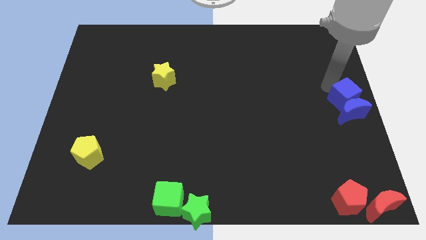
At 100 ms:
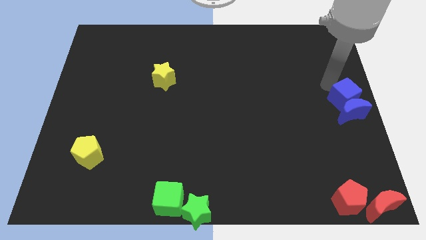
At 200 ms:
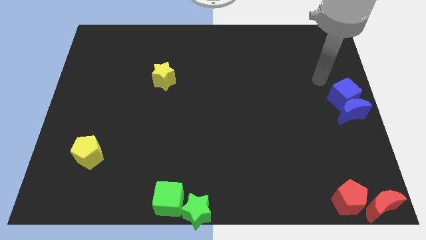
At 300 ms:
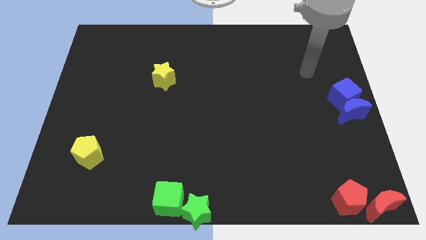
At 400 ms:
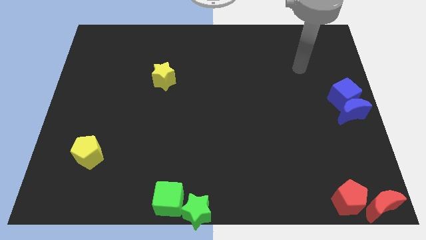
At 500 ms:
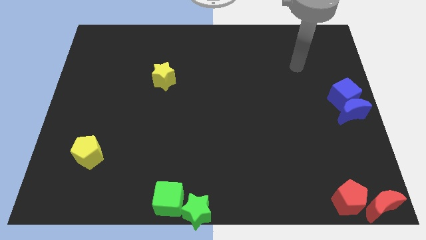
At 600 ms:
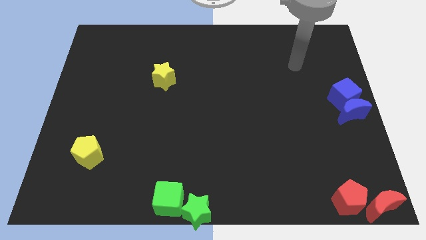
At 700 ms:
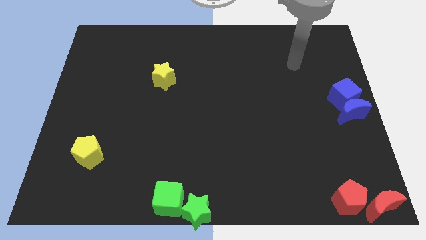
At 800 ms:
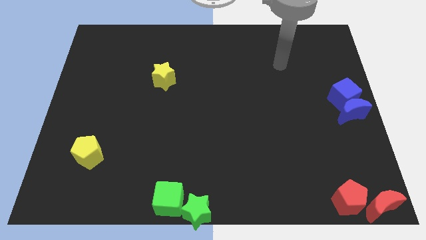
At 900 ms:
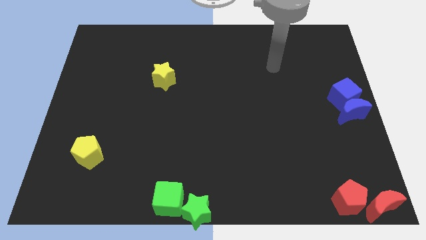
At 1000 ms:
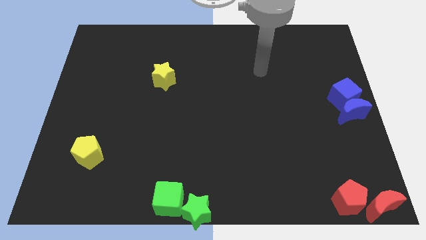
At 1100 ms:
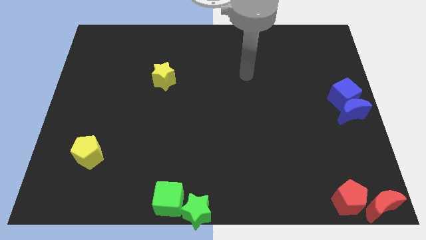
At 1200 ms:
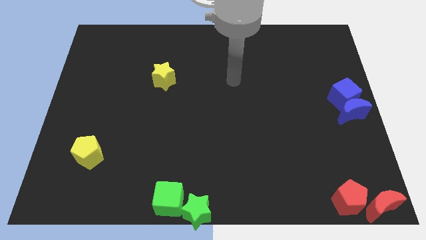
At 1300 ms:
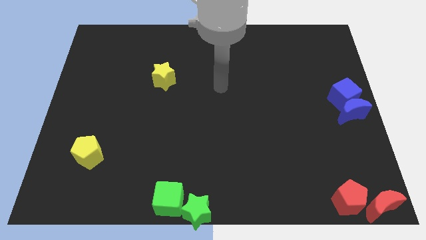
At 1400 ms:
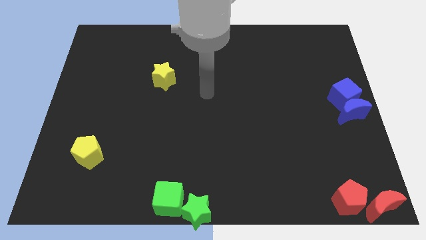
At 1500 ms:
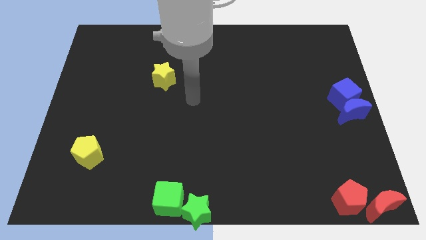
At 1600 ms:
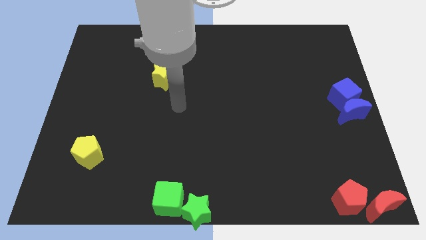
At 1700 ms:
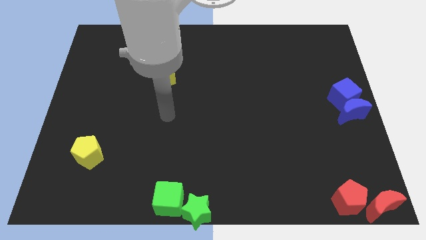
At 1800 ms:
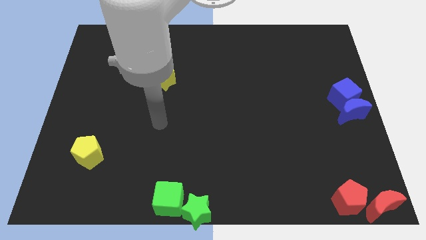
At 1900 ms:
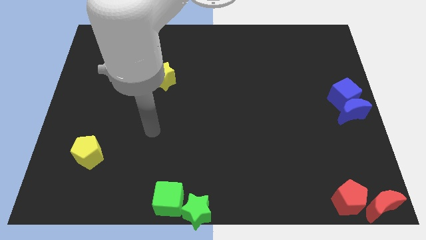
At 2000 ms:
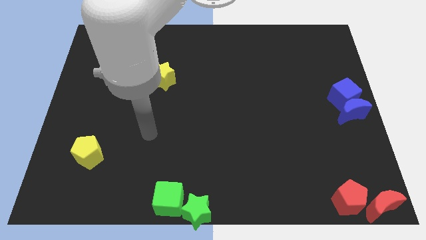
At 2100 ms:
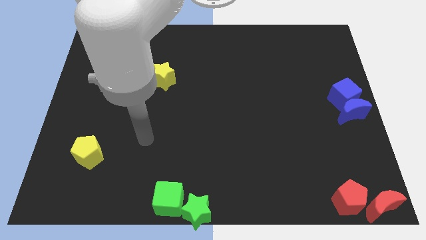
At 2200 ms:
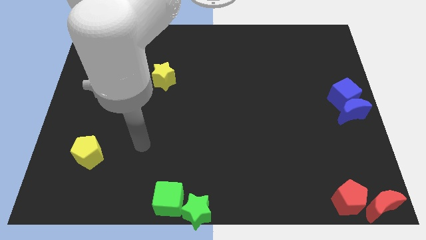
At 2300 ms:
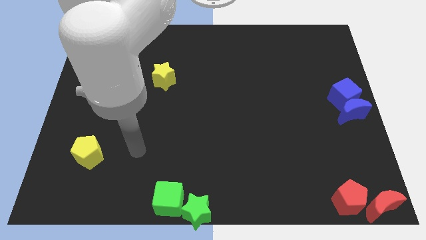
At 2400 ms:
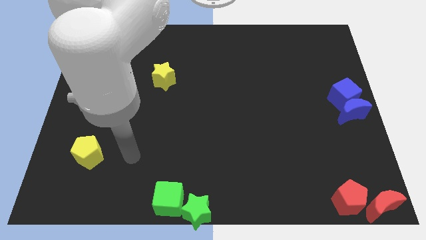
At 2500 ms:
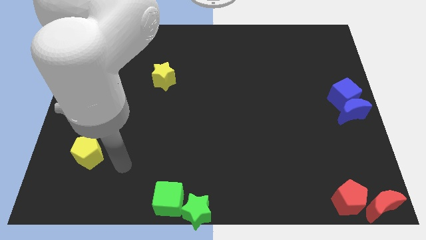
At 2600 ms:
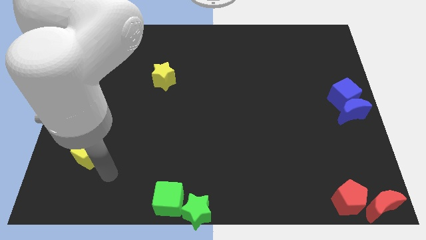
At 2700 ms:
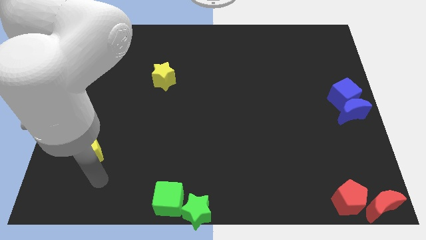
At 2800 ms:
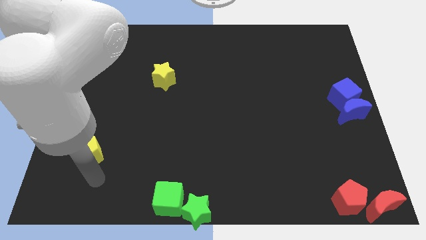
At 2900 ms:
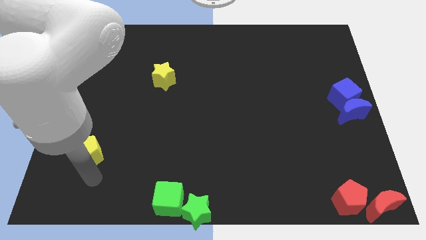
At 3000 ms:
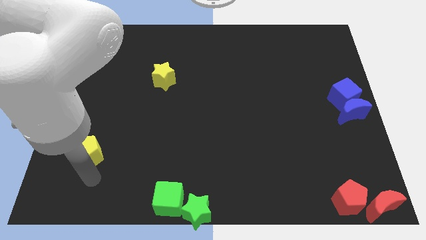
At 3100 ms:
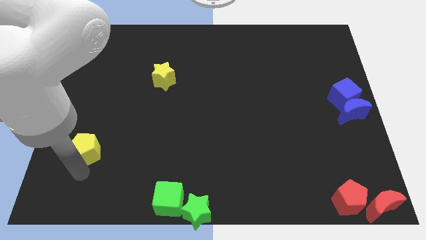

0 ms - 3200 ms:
point your arm towards the bottom side of the yellow pentagon

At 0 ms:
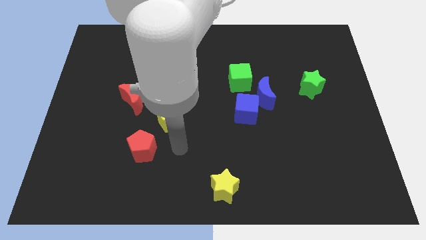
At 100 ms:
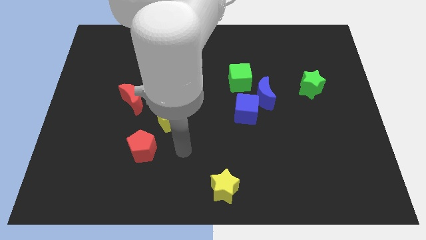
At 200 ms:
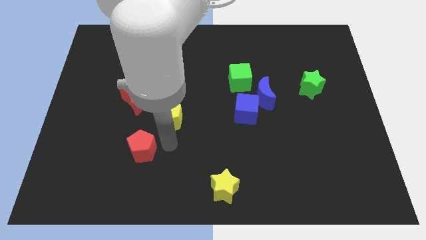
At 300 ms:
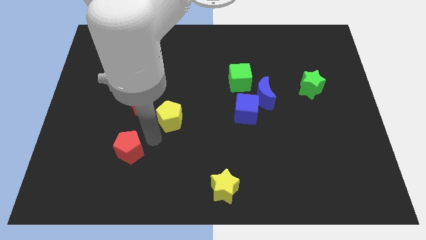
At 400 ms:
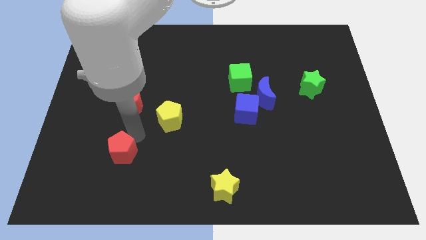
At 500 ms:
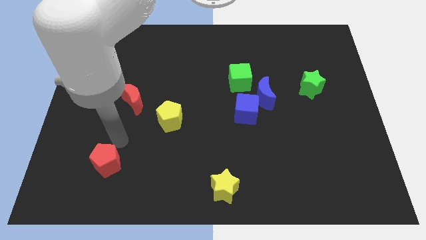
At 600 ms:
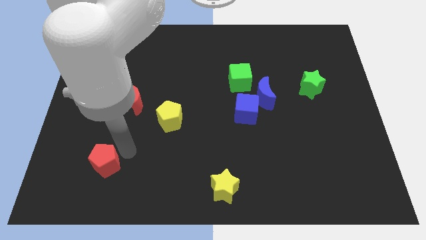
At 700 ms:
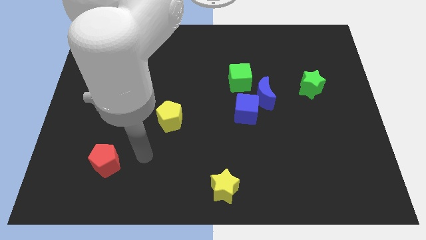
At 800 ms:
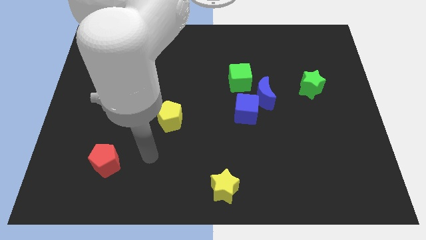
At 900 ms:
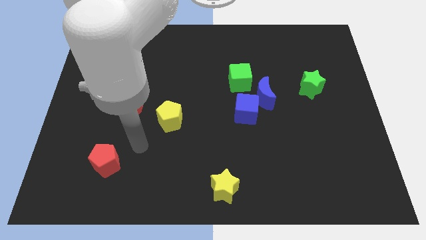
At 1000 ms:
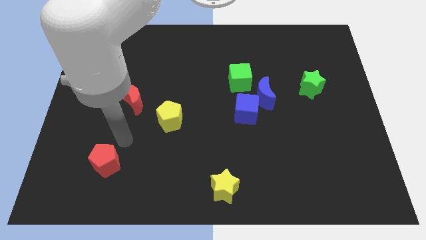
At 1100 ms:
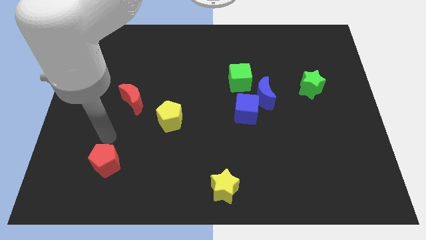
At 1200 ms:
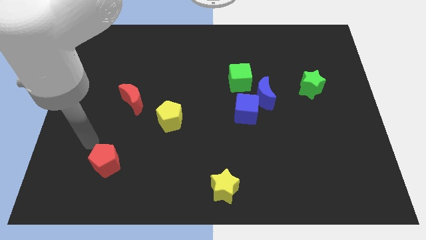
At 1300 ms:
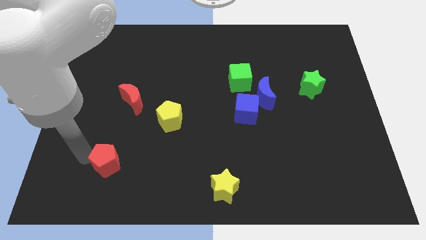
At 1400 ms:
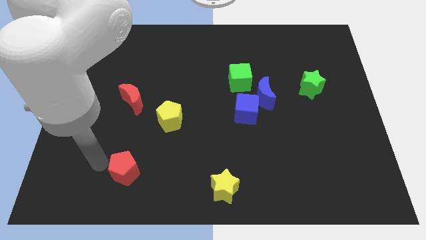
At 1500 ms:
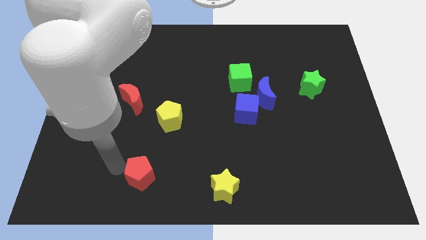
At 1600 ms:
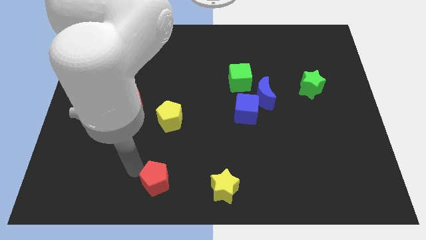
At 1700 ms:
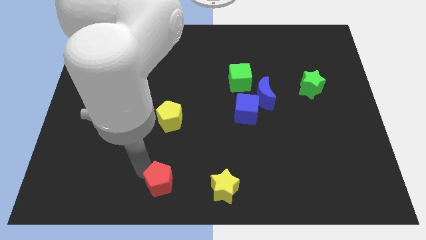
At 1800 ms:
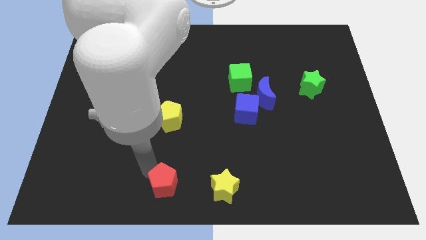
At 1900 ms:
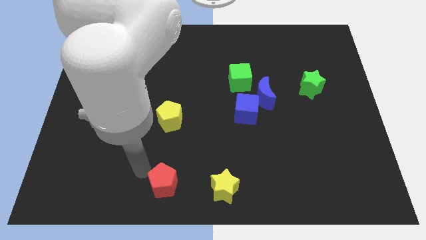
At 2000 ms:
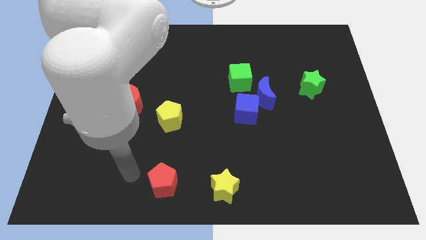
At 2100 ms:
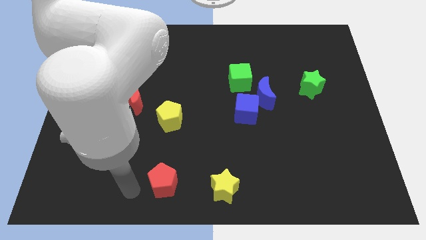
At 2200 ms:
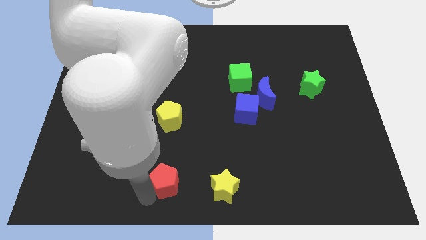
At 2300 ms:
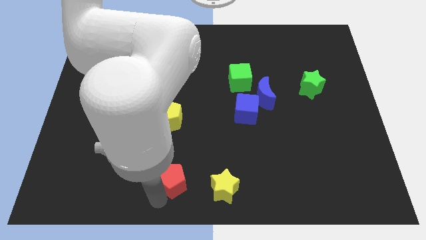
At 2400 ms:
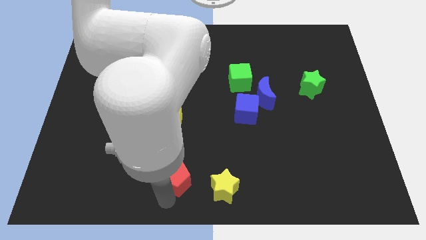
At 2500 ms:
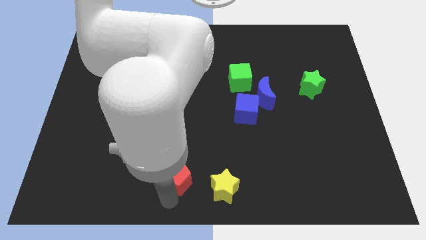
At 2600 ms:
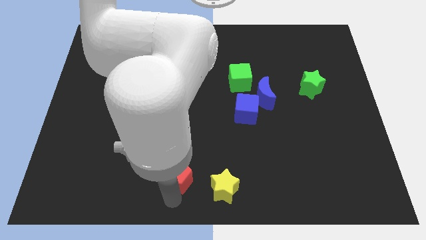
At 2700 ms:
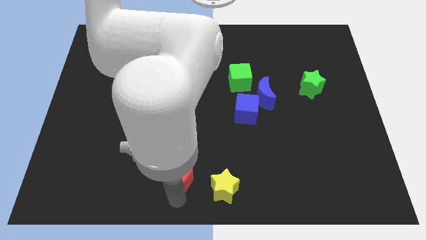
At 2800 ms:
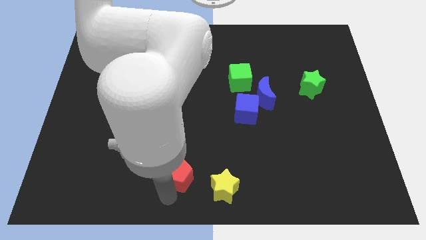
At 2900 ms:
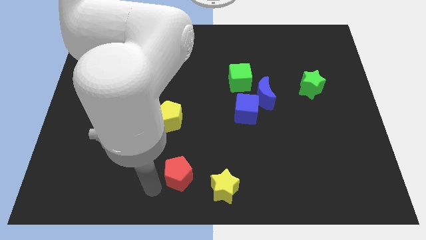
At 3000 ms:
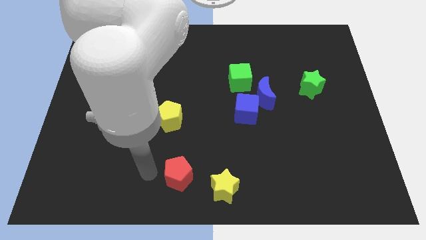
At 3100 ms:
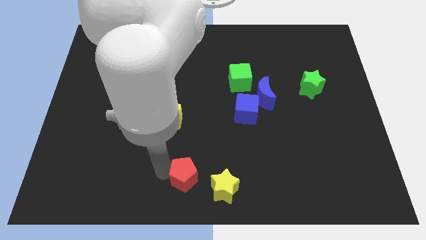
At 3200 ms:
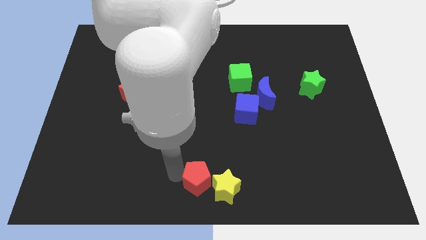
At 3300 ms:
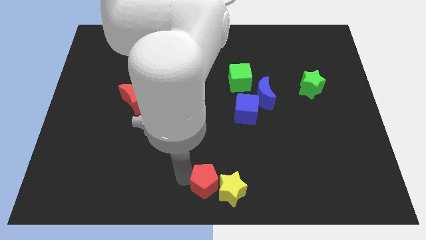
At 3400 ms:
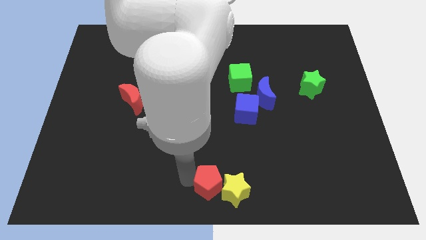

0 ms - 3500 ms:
move the red pentagon into the yellow star

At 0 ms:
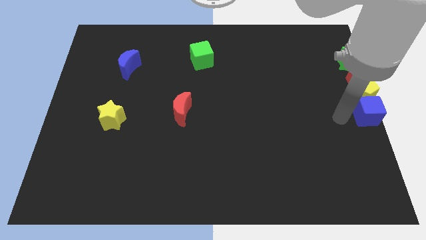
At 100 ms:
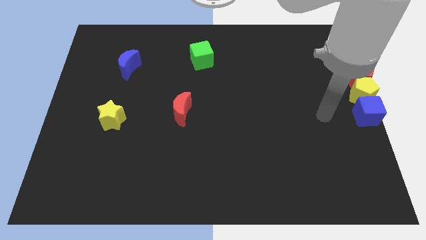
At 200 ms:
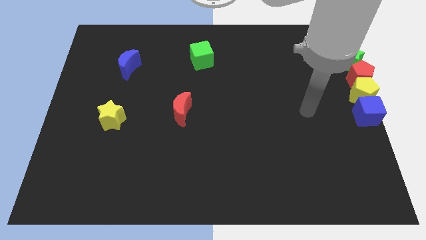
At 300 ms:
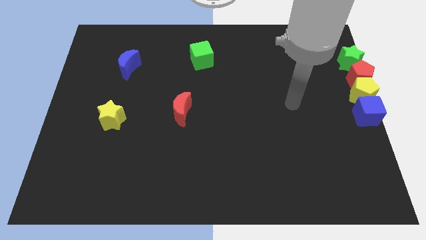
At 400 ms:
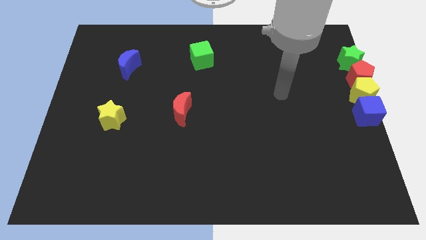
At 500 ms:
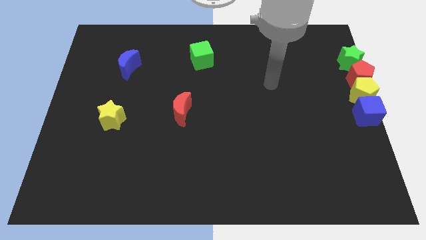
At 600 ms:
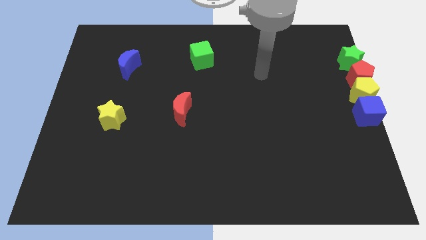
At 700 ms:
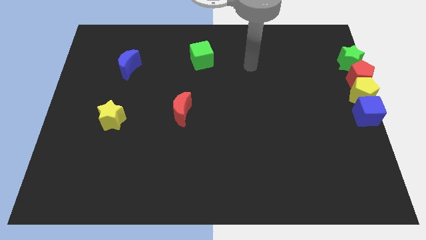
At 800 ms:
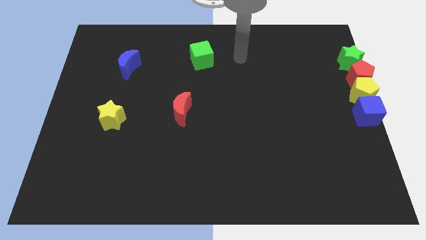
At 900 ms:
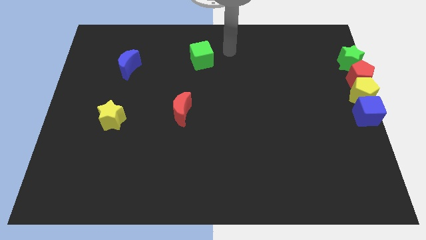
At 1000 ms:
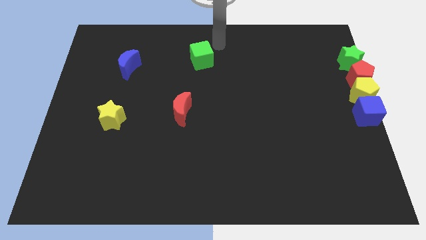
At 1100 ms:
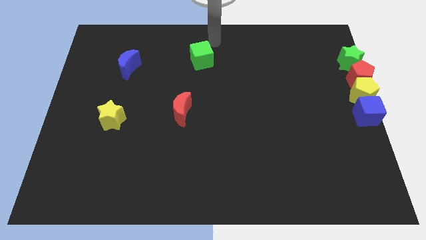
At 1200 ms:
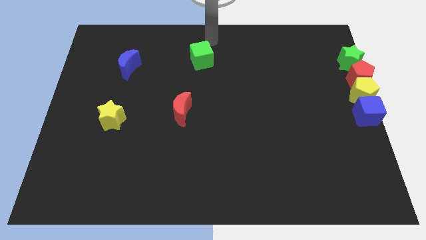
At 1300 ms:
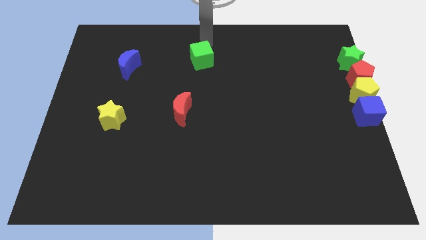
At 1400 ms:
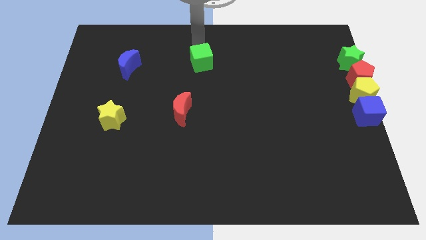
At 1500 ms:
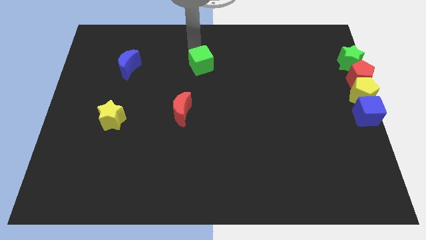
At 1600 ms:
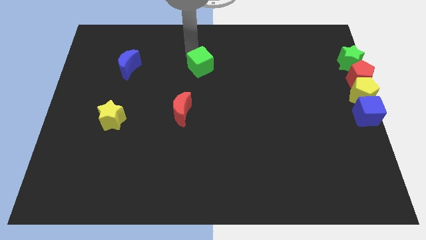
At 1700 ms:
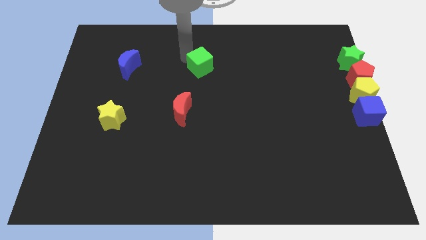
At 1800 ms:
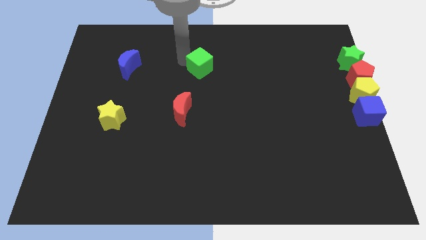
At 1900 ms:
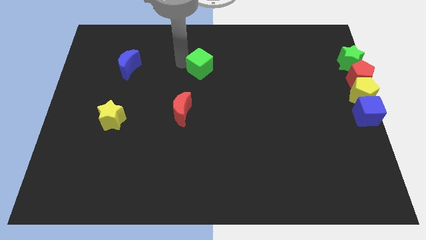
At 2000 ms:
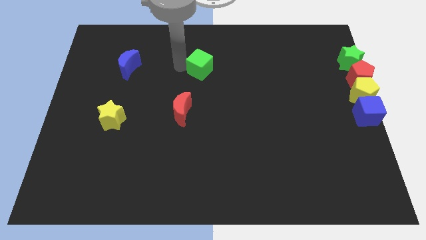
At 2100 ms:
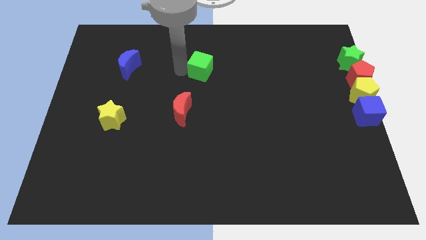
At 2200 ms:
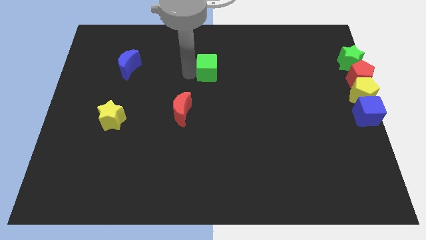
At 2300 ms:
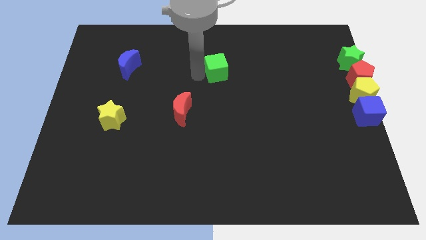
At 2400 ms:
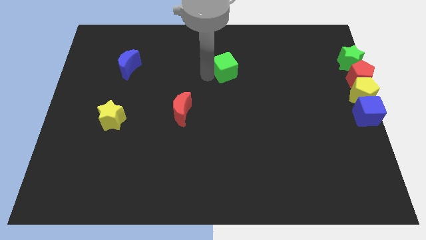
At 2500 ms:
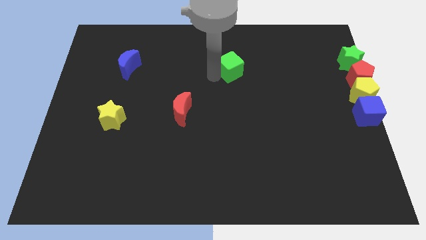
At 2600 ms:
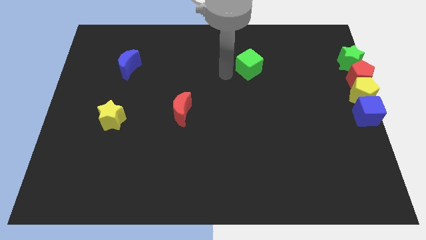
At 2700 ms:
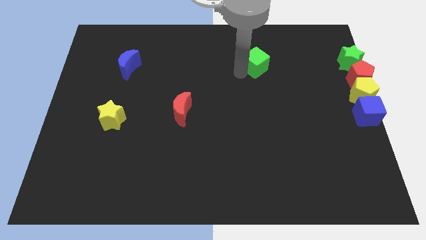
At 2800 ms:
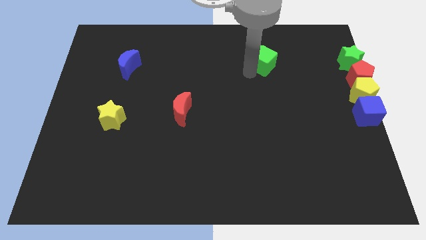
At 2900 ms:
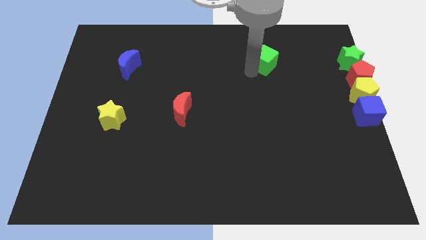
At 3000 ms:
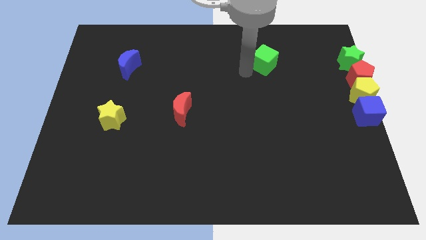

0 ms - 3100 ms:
slide the green cube towards the green star
